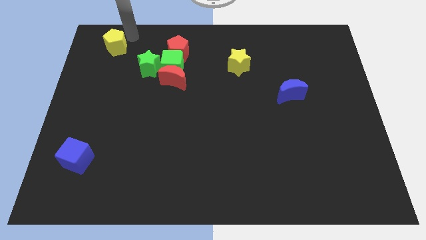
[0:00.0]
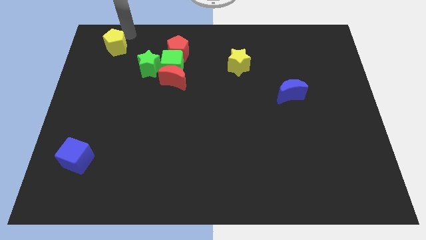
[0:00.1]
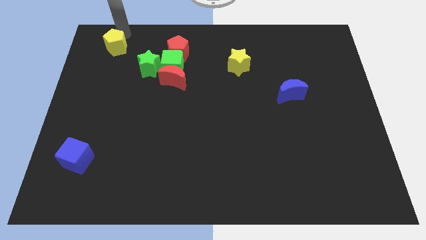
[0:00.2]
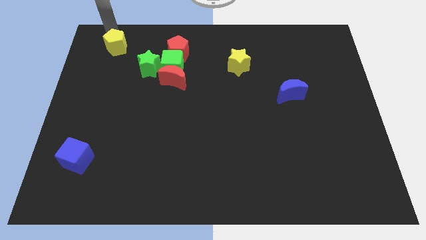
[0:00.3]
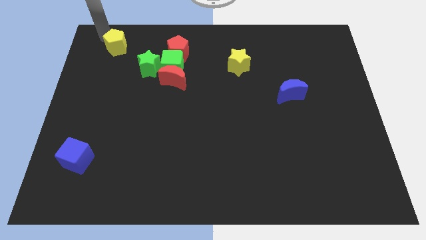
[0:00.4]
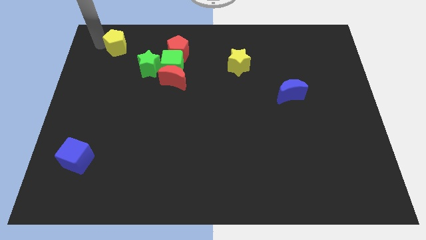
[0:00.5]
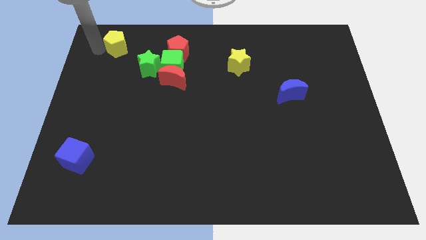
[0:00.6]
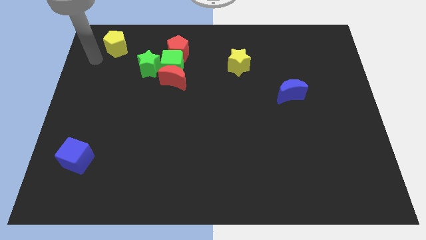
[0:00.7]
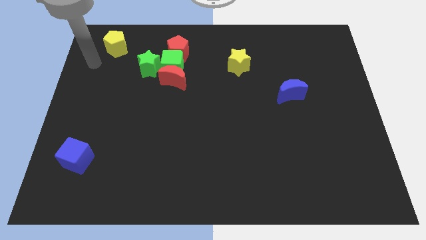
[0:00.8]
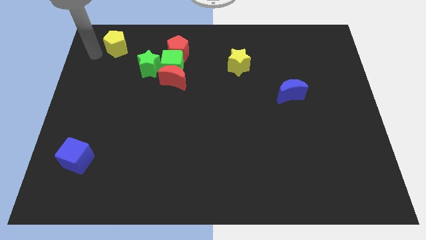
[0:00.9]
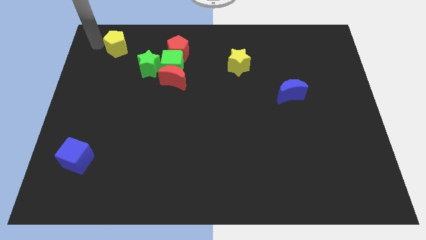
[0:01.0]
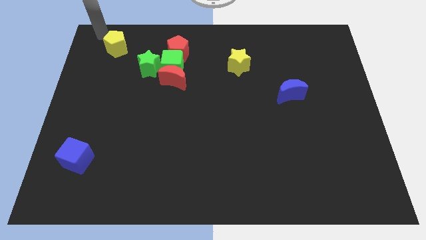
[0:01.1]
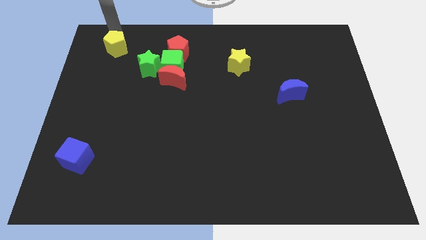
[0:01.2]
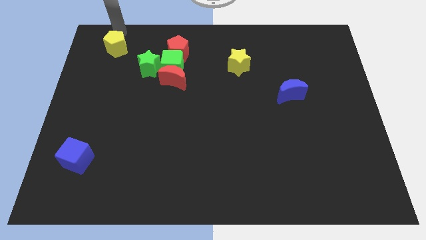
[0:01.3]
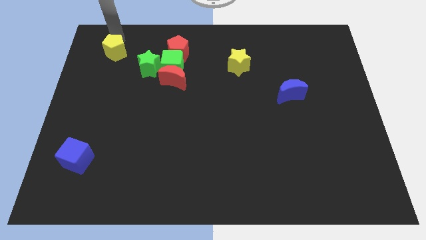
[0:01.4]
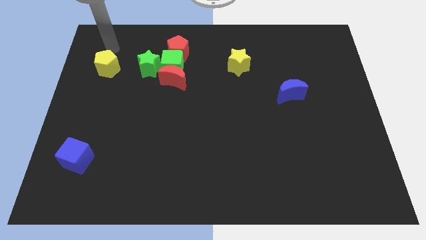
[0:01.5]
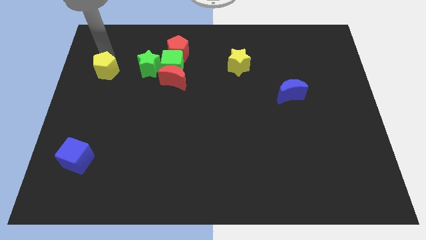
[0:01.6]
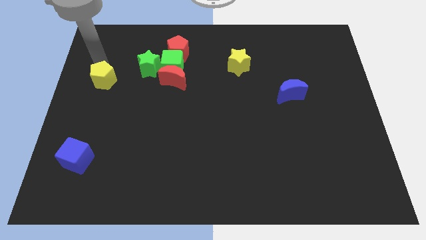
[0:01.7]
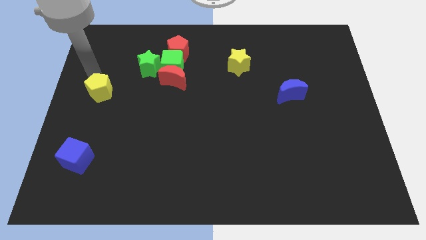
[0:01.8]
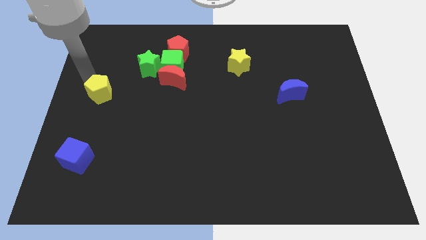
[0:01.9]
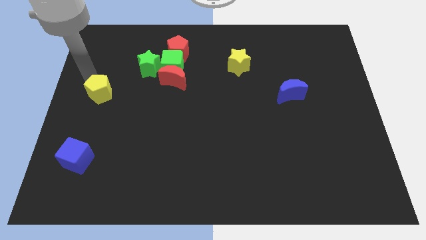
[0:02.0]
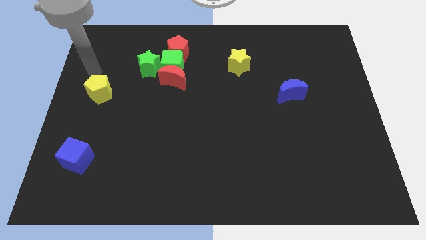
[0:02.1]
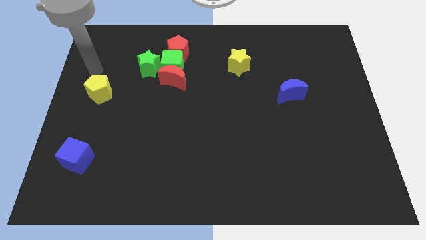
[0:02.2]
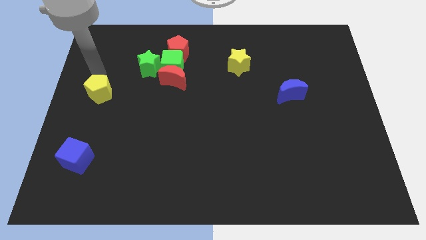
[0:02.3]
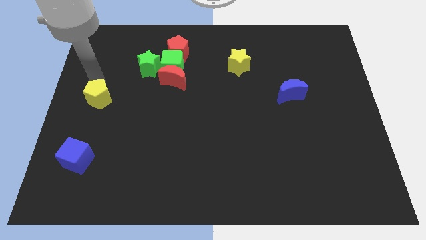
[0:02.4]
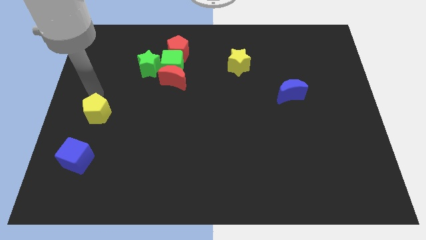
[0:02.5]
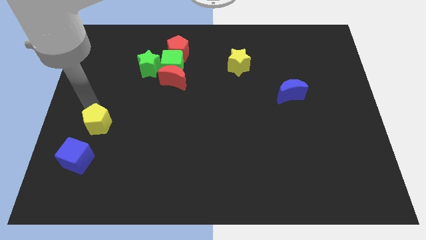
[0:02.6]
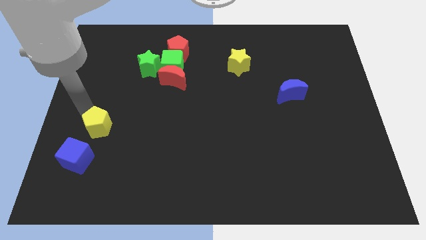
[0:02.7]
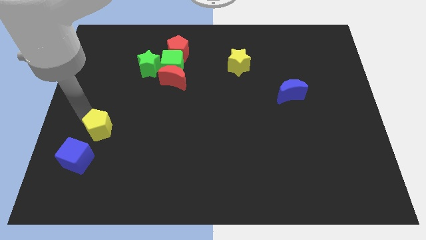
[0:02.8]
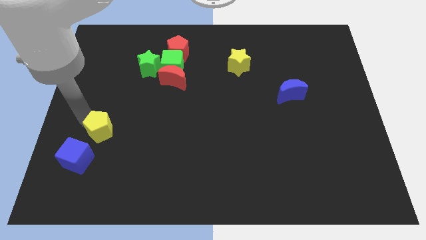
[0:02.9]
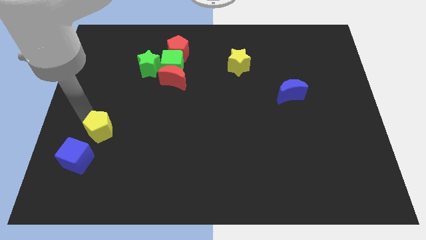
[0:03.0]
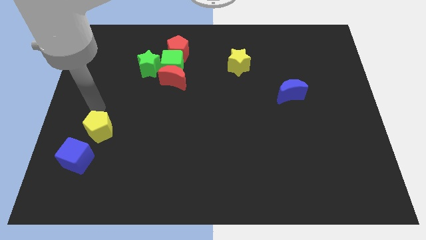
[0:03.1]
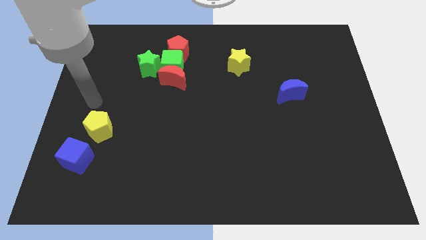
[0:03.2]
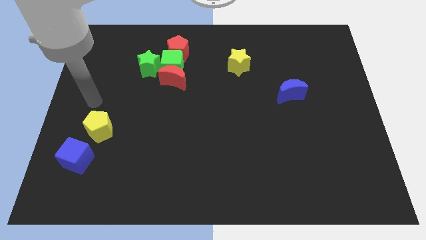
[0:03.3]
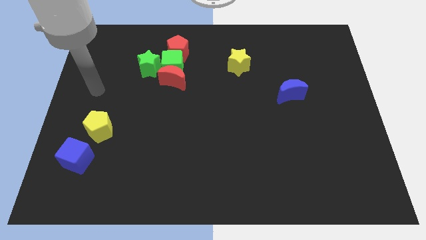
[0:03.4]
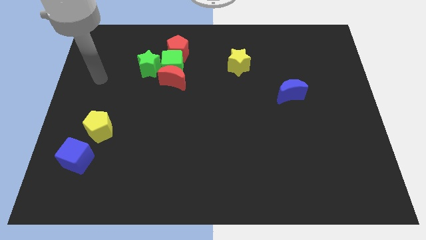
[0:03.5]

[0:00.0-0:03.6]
push the yellow pentagon to the top right side of the blue cube

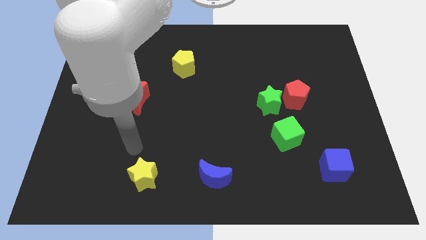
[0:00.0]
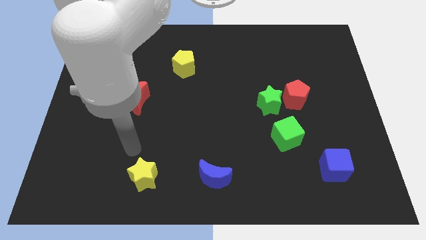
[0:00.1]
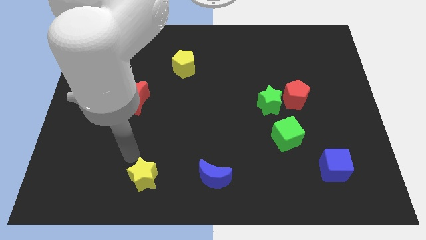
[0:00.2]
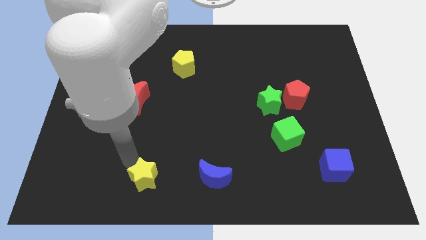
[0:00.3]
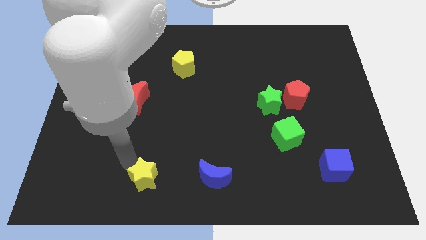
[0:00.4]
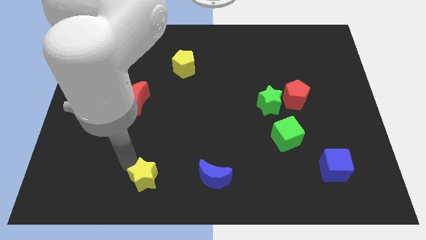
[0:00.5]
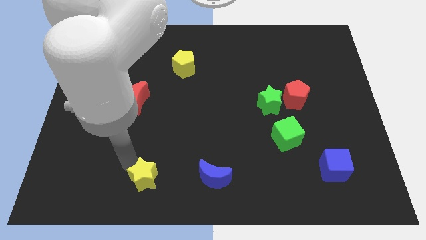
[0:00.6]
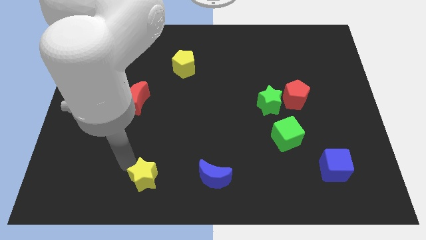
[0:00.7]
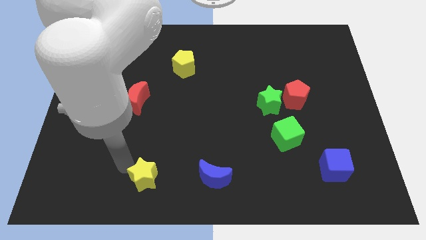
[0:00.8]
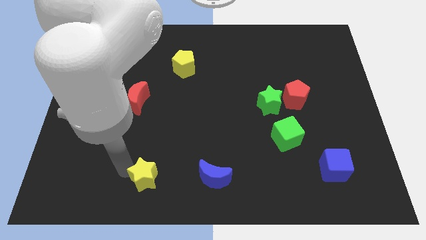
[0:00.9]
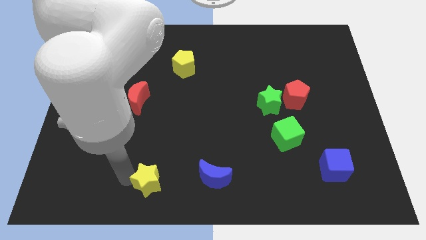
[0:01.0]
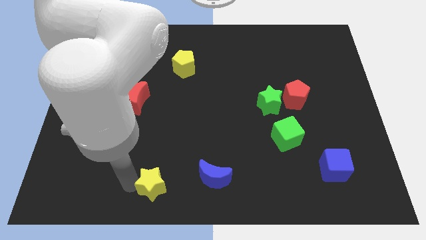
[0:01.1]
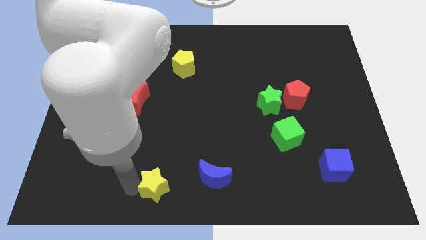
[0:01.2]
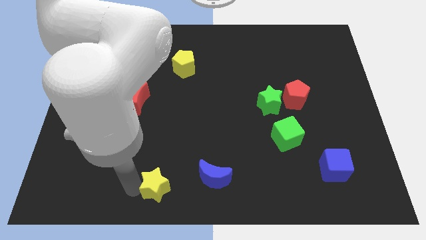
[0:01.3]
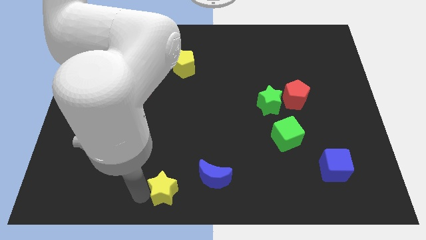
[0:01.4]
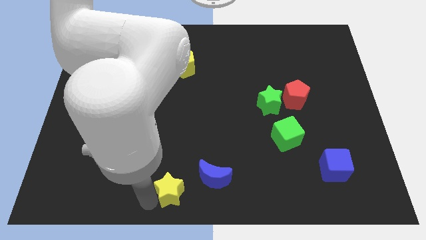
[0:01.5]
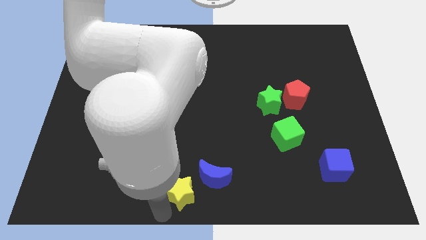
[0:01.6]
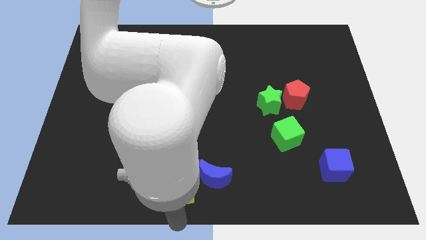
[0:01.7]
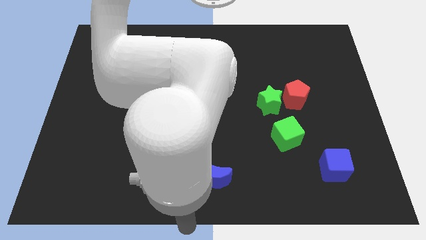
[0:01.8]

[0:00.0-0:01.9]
move the yellow star bottom left to the blue moon

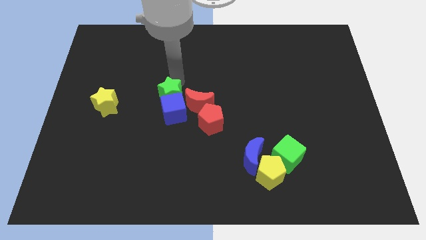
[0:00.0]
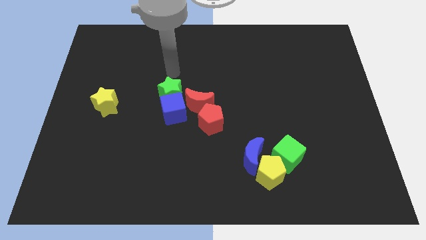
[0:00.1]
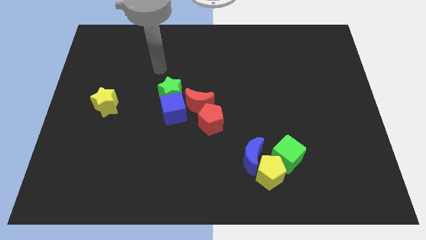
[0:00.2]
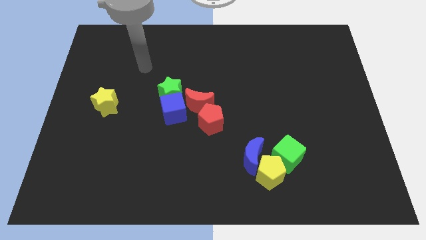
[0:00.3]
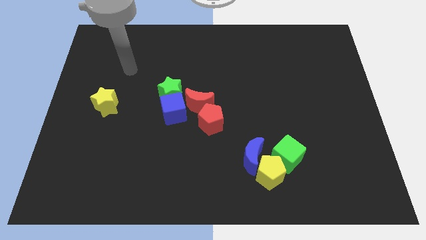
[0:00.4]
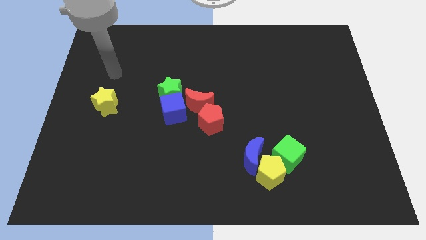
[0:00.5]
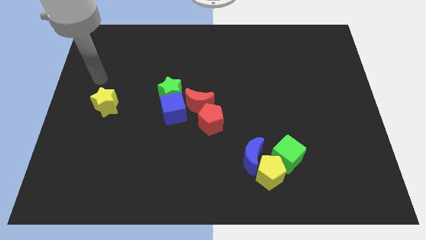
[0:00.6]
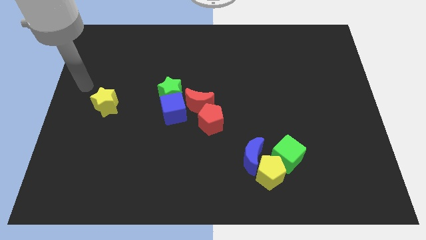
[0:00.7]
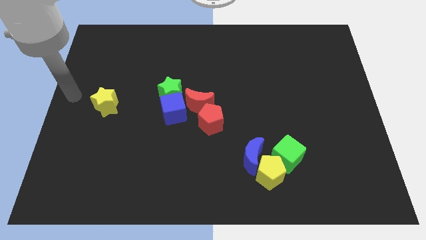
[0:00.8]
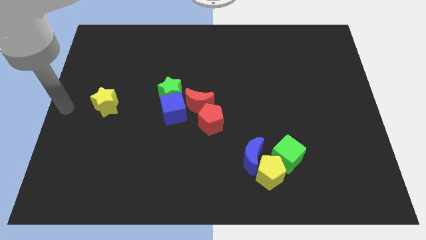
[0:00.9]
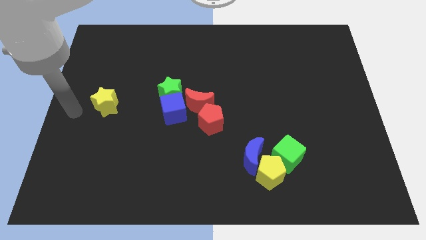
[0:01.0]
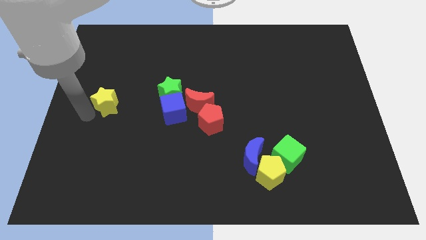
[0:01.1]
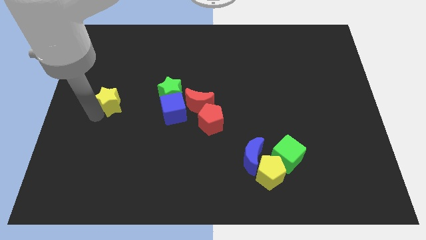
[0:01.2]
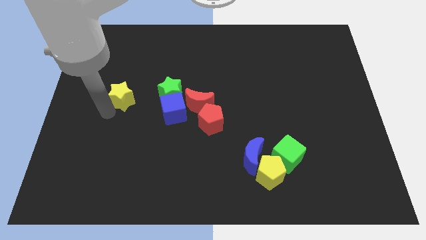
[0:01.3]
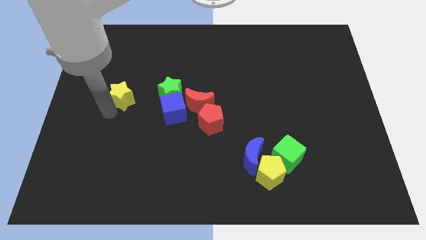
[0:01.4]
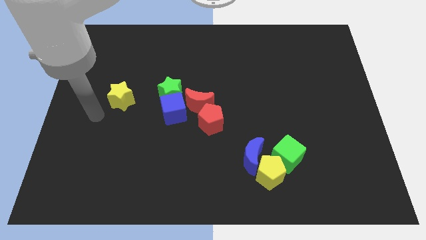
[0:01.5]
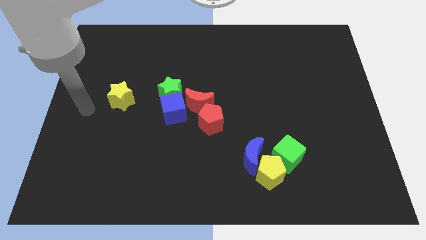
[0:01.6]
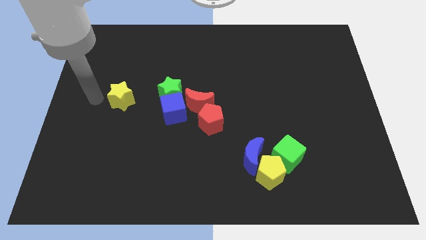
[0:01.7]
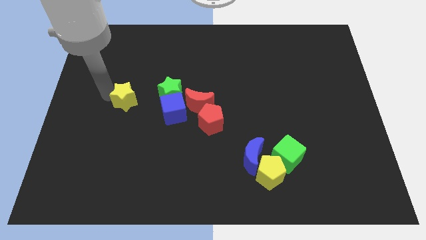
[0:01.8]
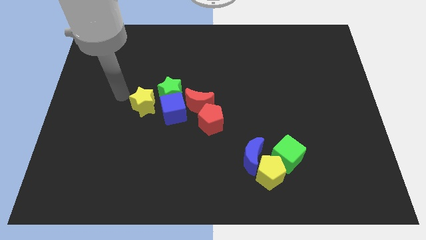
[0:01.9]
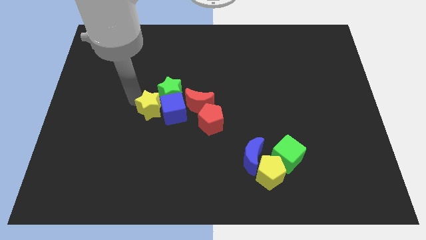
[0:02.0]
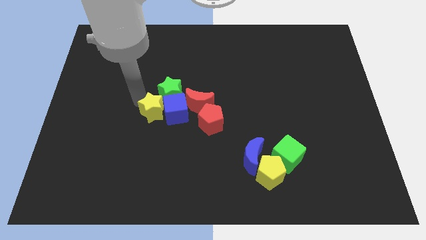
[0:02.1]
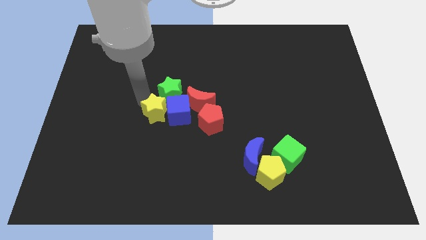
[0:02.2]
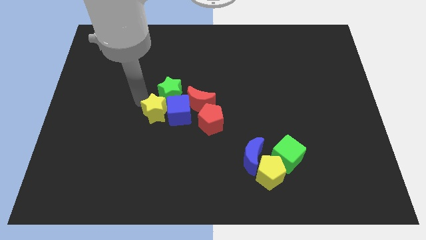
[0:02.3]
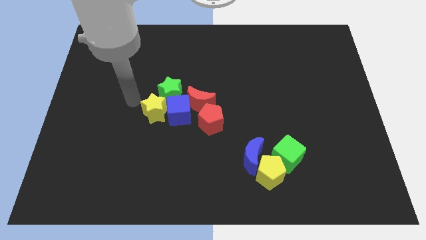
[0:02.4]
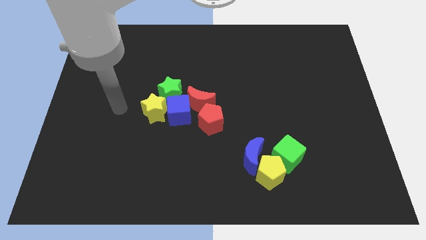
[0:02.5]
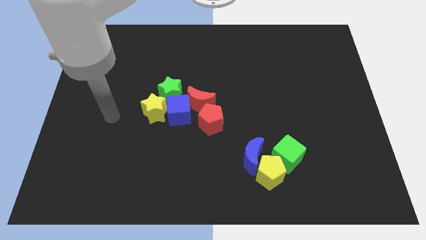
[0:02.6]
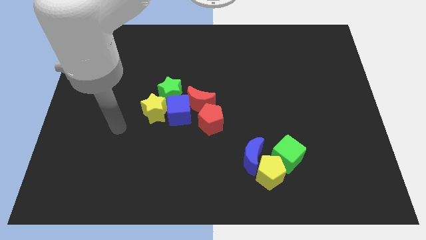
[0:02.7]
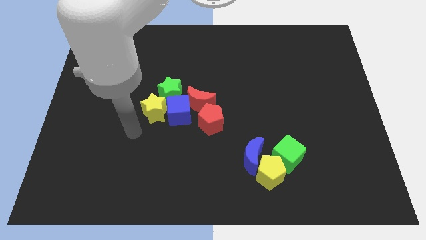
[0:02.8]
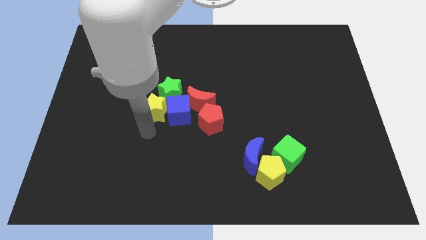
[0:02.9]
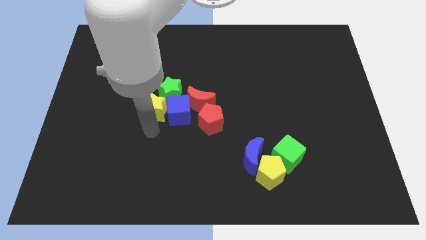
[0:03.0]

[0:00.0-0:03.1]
slide the yellow star to the bottom left side of the green star

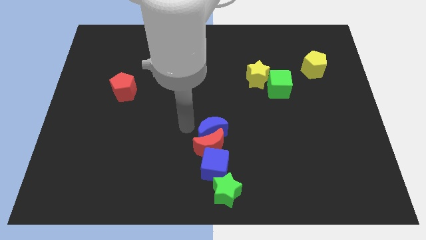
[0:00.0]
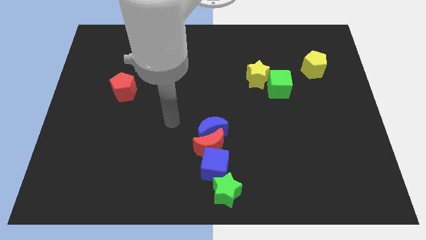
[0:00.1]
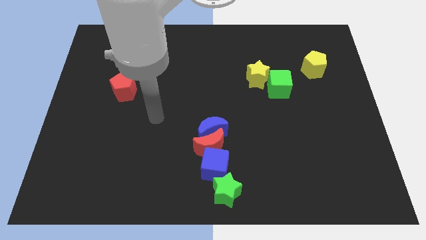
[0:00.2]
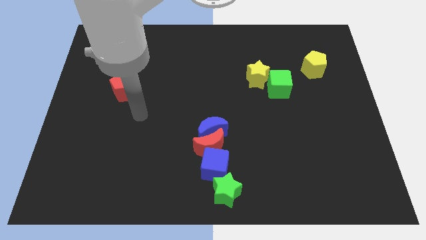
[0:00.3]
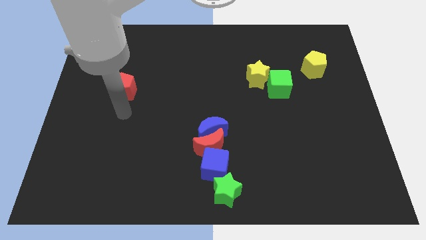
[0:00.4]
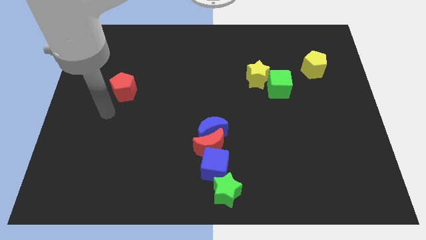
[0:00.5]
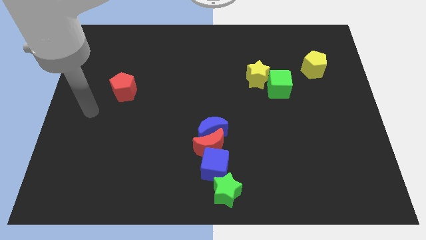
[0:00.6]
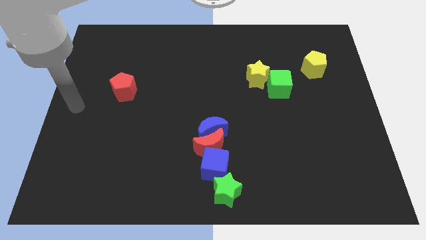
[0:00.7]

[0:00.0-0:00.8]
move your arm to the centre left side of the board
